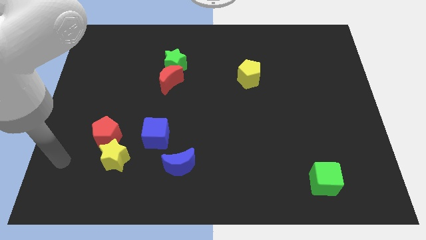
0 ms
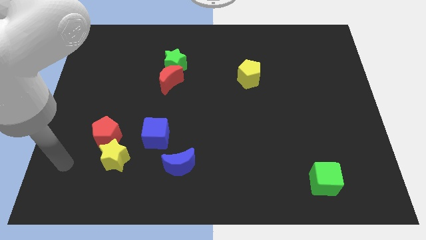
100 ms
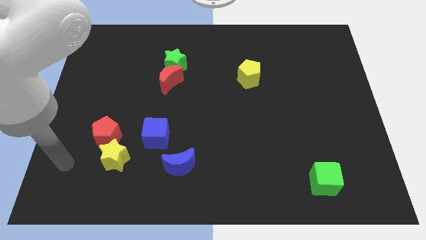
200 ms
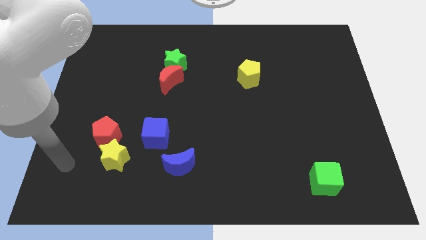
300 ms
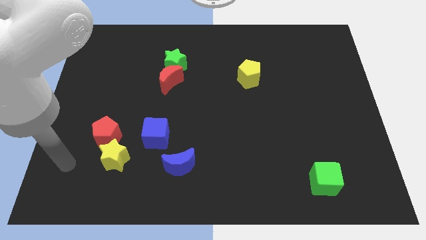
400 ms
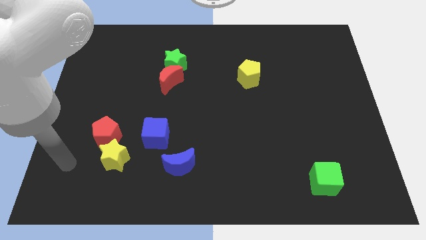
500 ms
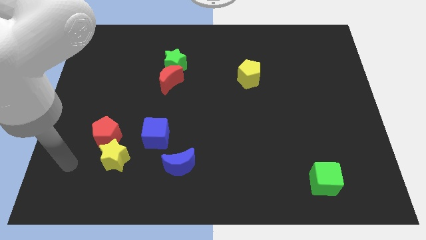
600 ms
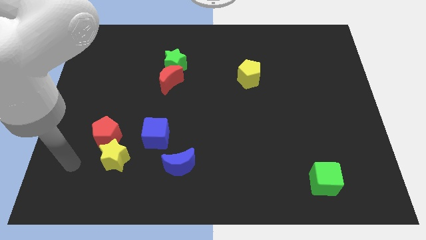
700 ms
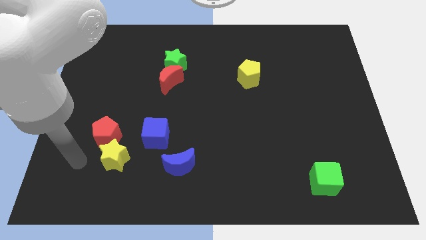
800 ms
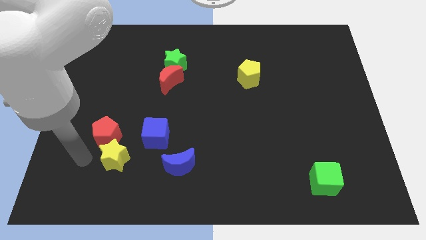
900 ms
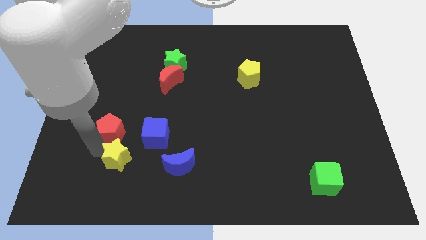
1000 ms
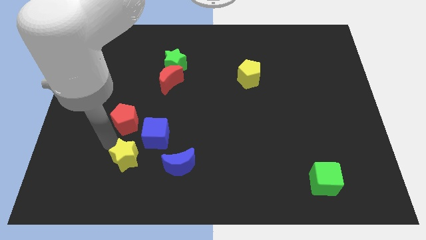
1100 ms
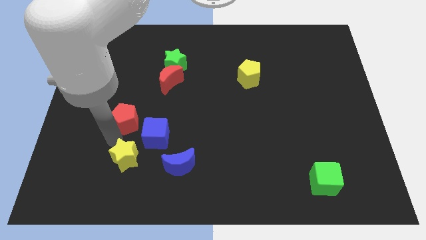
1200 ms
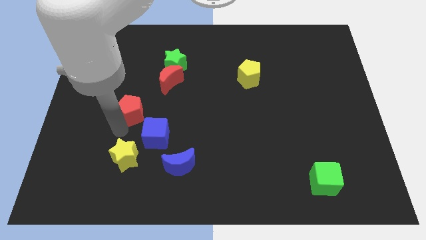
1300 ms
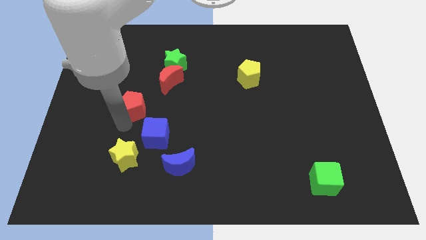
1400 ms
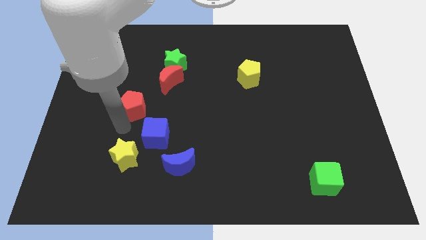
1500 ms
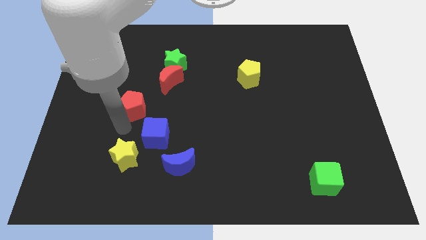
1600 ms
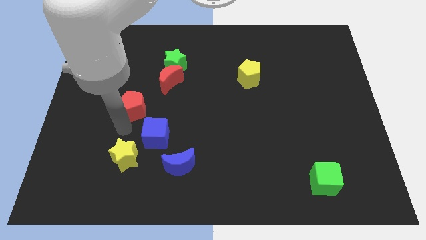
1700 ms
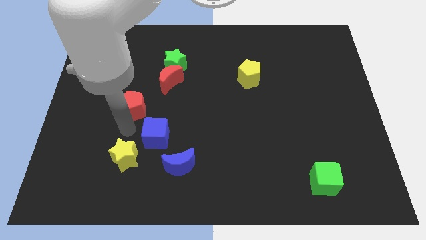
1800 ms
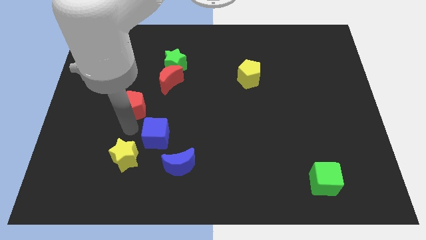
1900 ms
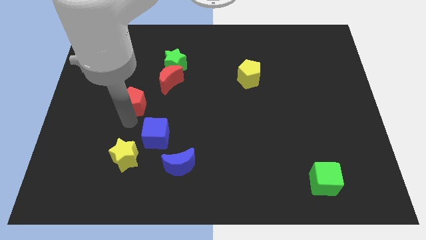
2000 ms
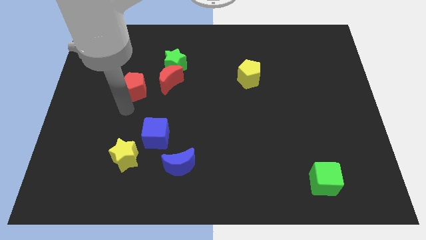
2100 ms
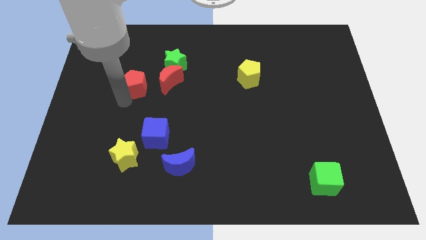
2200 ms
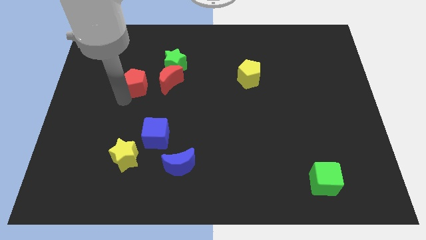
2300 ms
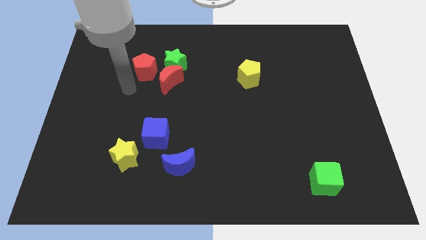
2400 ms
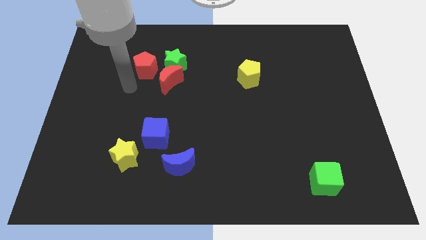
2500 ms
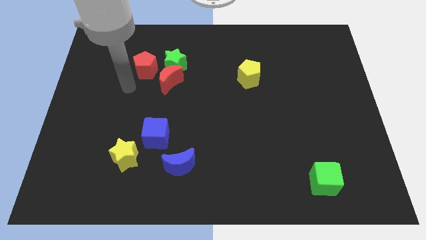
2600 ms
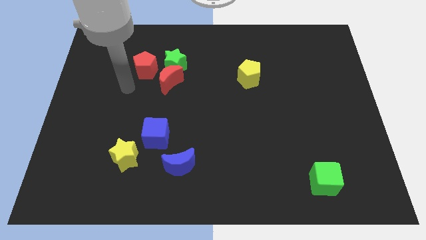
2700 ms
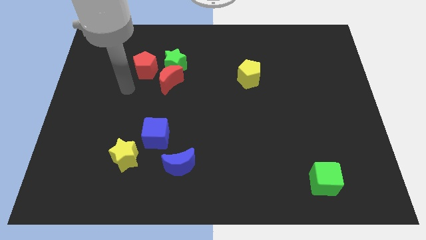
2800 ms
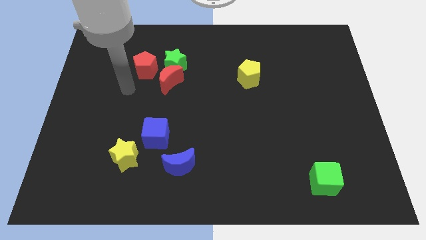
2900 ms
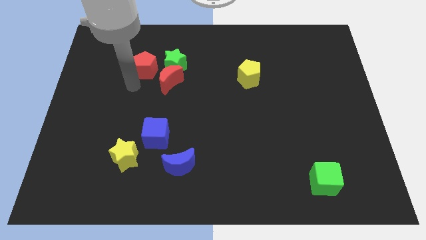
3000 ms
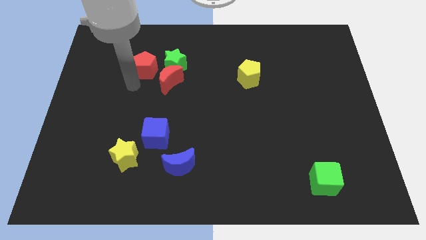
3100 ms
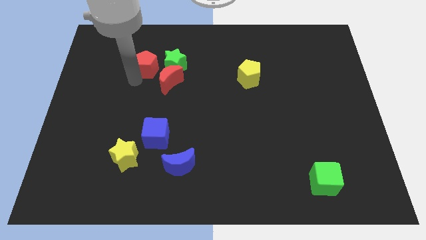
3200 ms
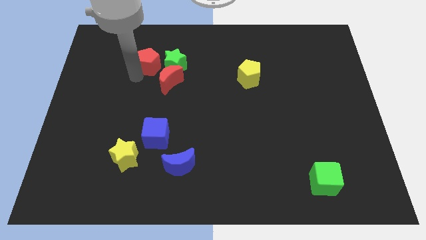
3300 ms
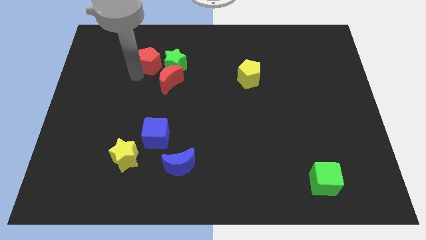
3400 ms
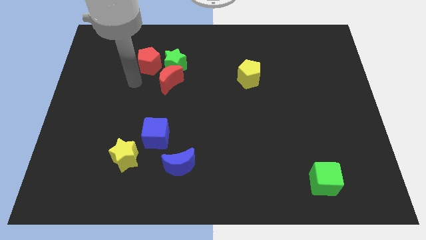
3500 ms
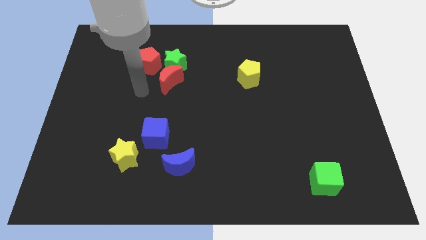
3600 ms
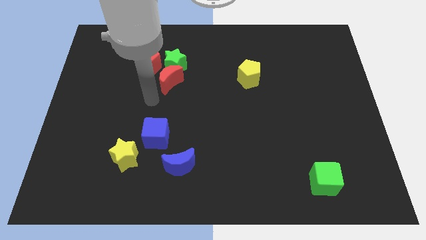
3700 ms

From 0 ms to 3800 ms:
move the red pentagon to the left side of the green star

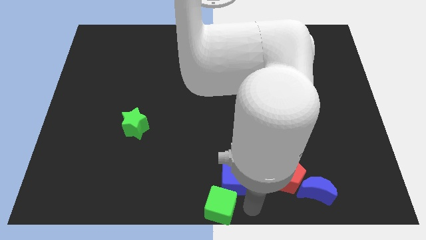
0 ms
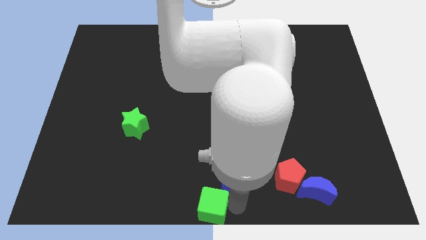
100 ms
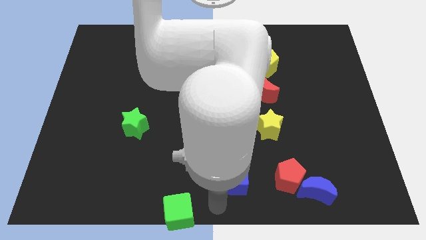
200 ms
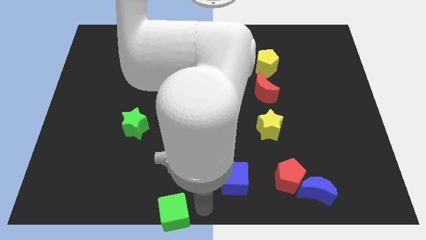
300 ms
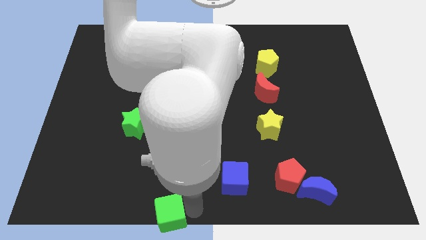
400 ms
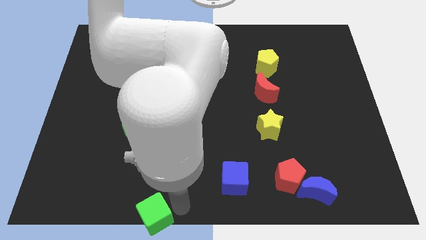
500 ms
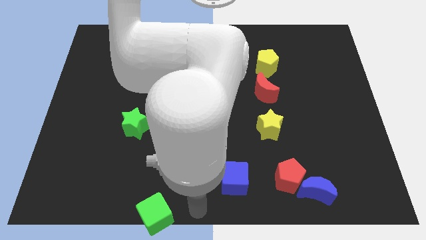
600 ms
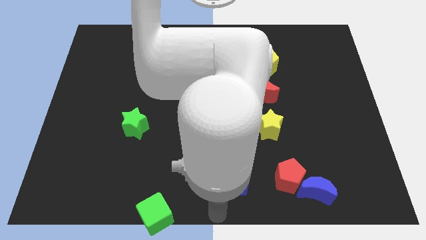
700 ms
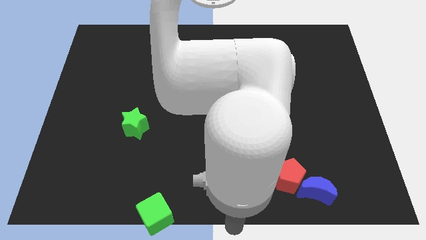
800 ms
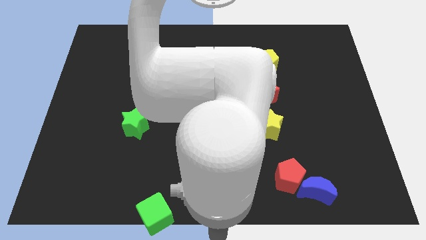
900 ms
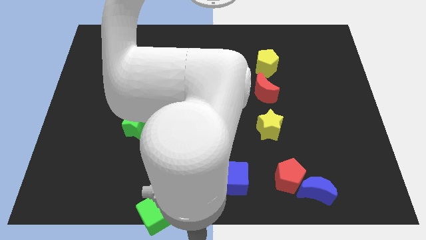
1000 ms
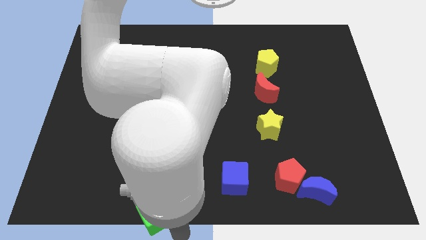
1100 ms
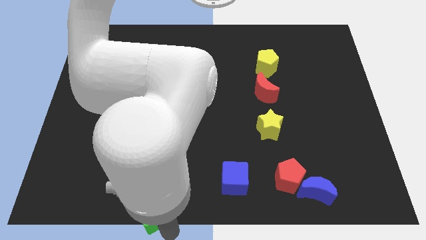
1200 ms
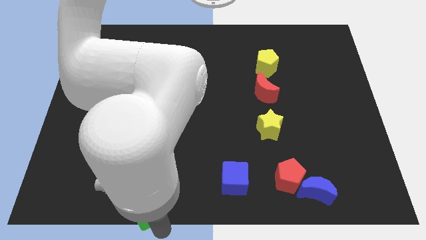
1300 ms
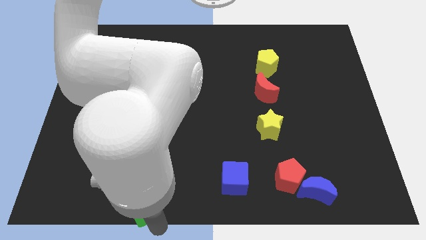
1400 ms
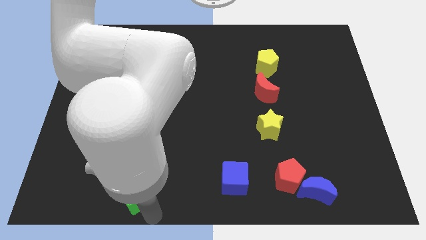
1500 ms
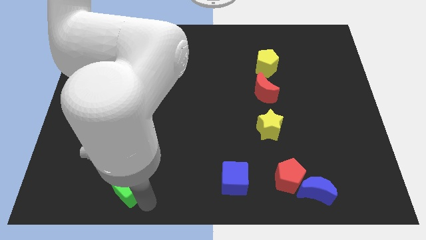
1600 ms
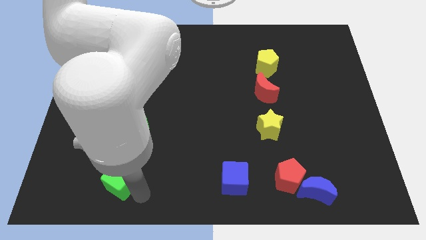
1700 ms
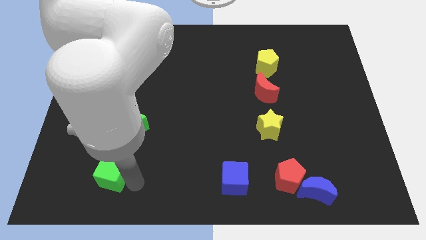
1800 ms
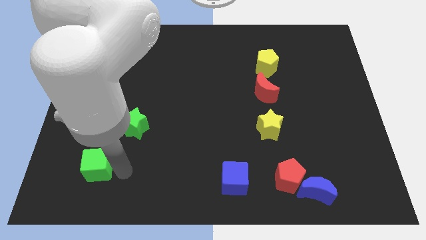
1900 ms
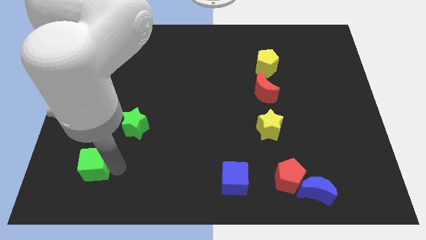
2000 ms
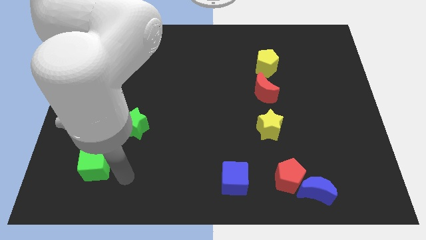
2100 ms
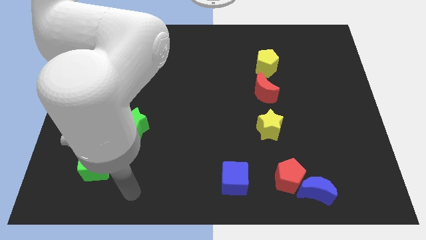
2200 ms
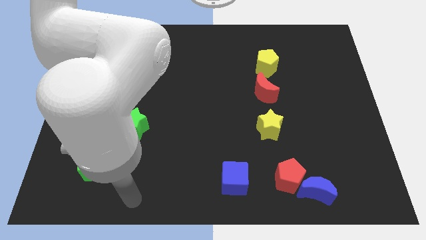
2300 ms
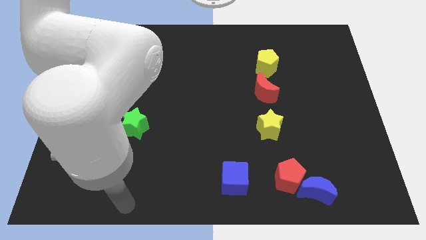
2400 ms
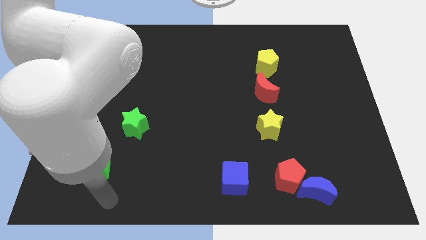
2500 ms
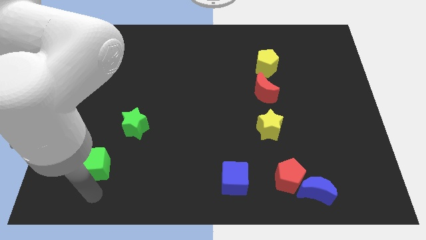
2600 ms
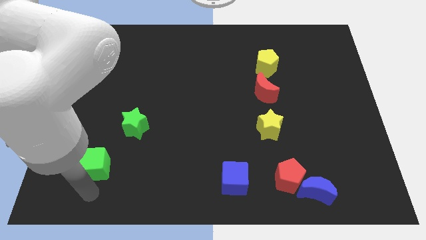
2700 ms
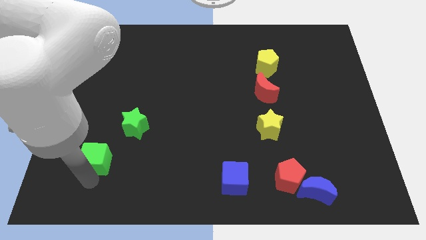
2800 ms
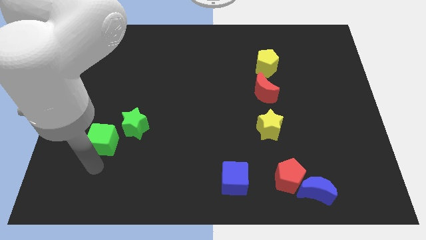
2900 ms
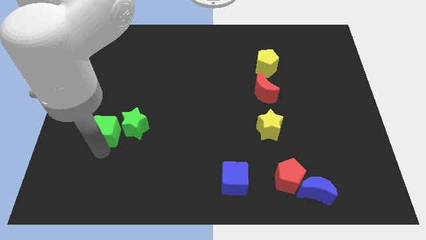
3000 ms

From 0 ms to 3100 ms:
push the green cube to the left side of the board

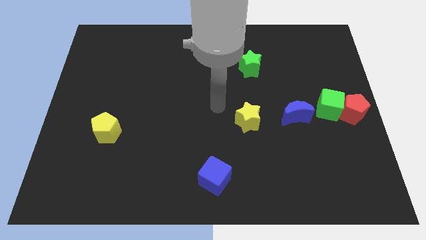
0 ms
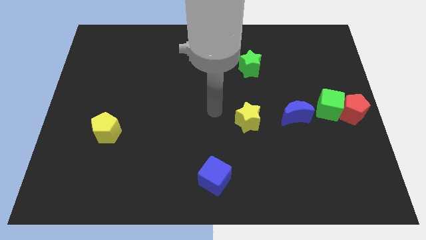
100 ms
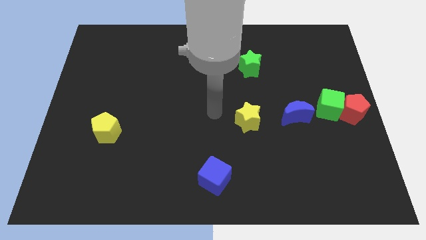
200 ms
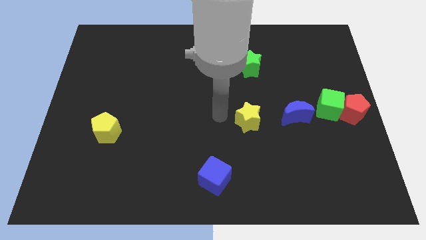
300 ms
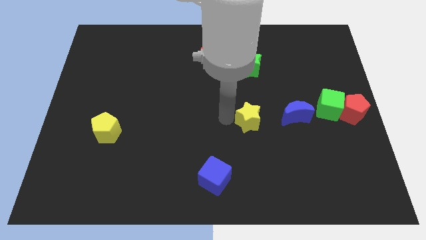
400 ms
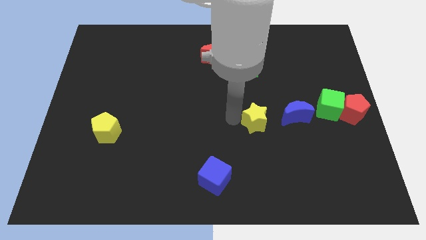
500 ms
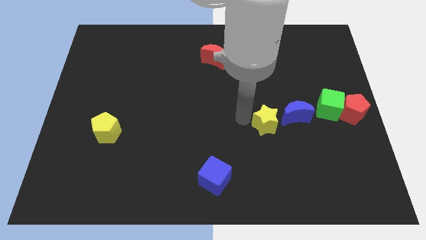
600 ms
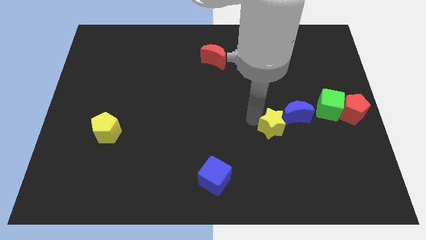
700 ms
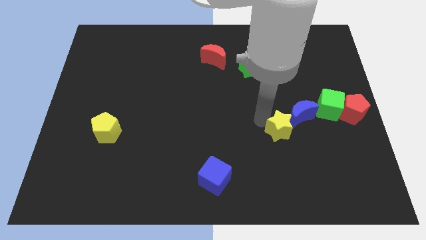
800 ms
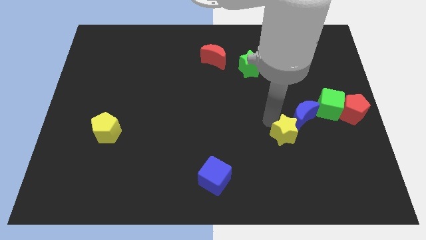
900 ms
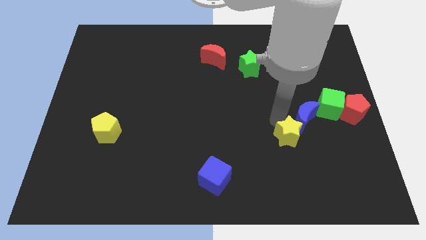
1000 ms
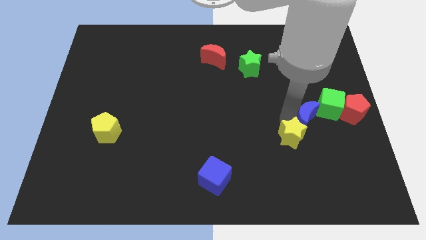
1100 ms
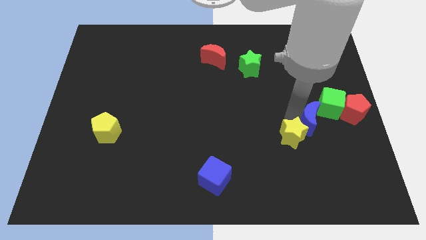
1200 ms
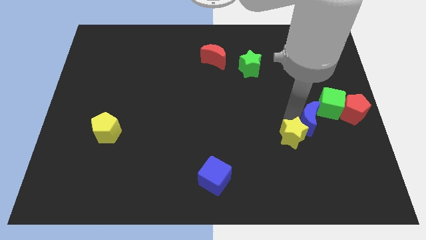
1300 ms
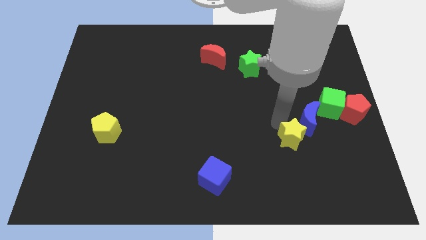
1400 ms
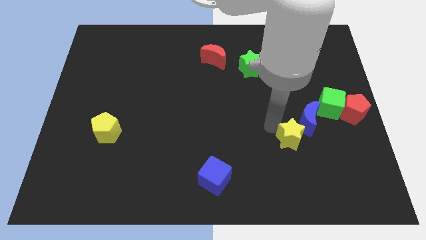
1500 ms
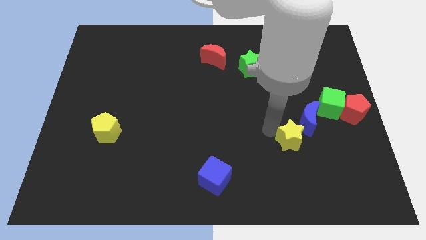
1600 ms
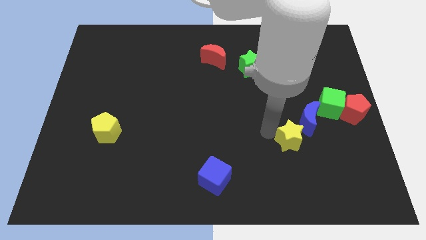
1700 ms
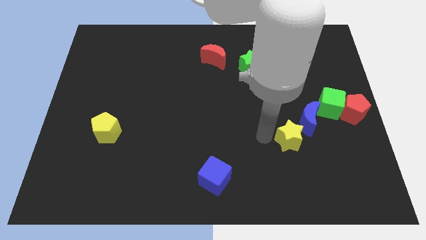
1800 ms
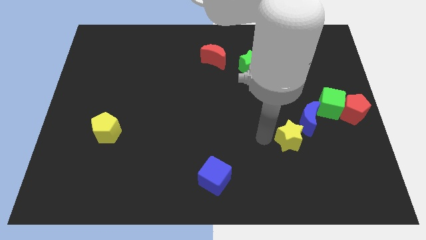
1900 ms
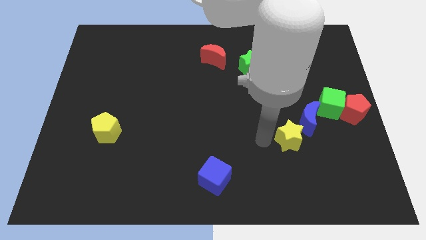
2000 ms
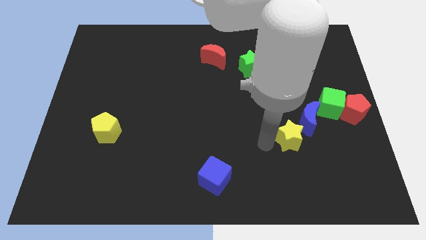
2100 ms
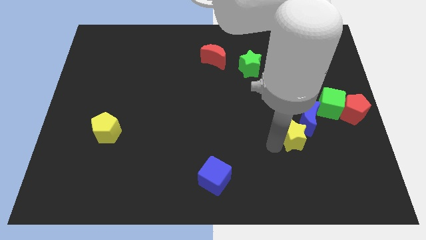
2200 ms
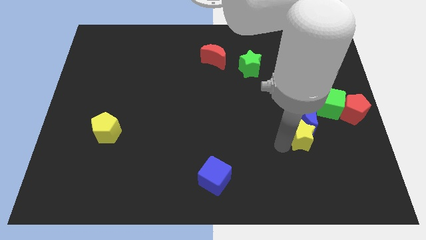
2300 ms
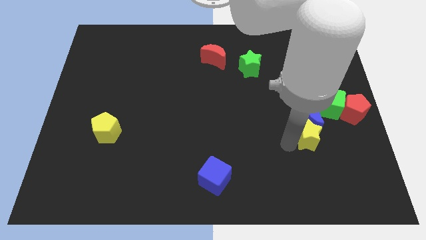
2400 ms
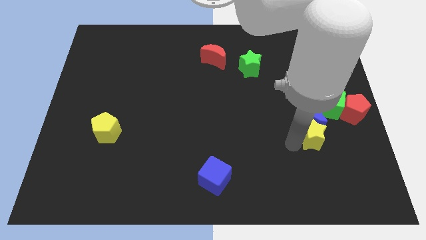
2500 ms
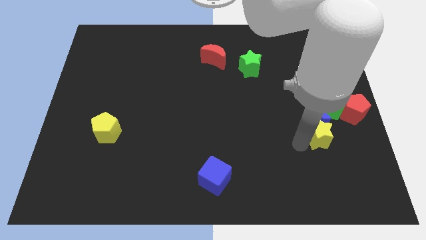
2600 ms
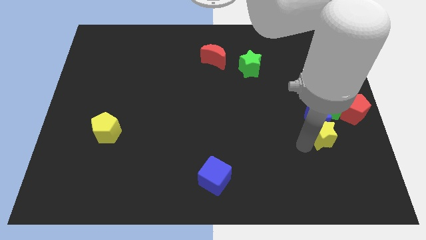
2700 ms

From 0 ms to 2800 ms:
move the yellow star below blue moon
